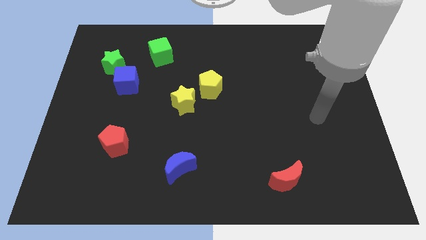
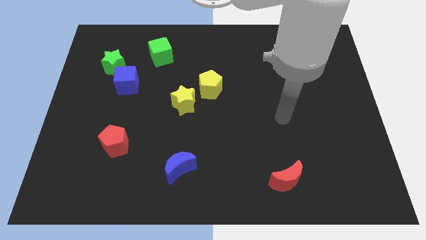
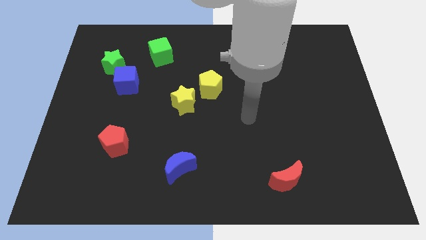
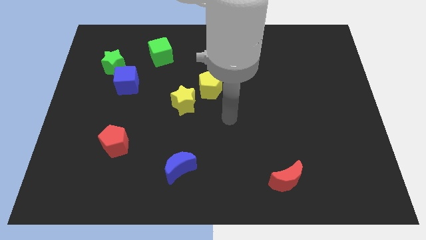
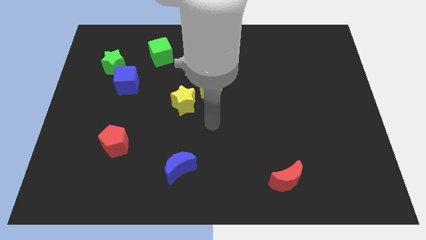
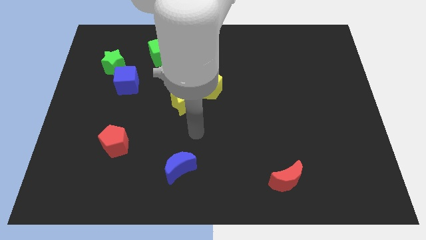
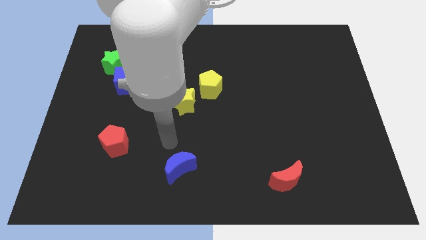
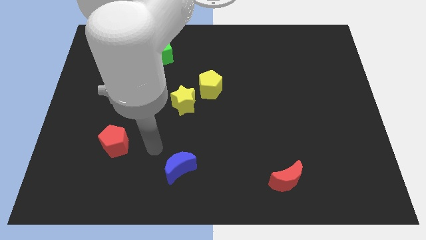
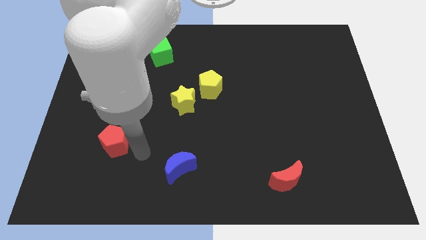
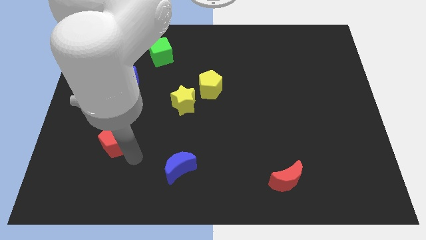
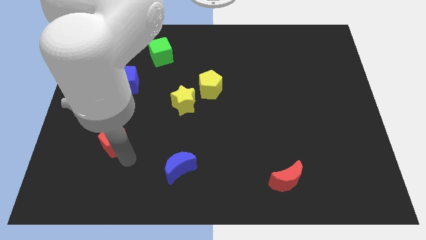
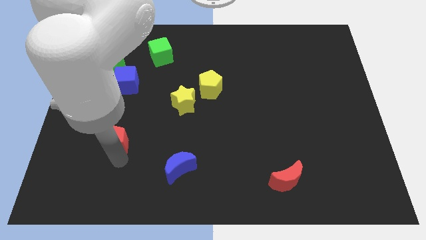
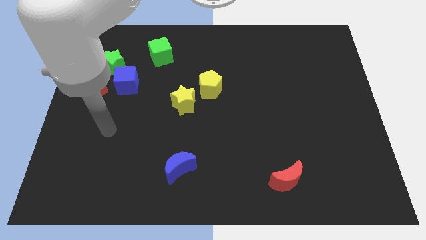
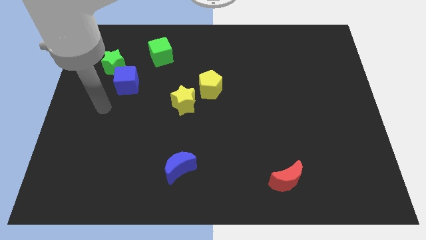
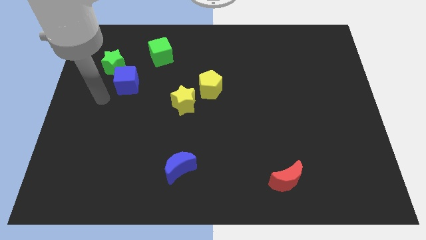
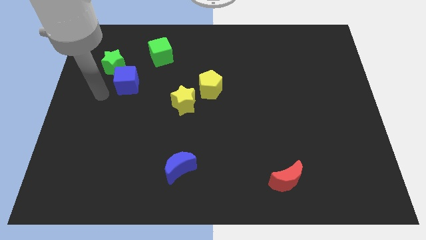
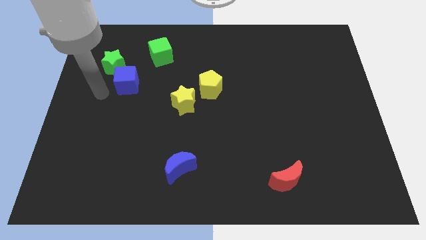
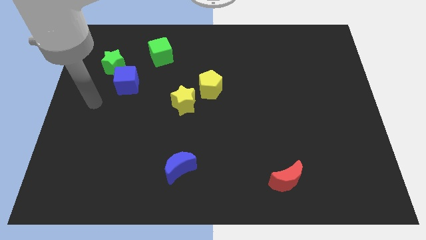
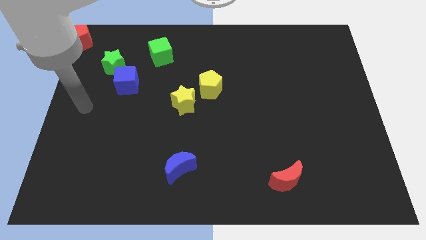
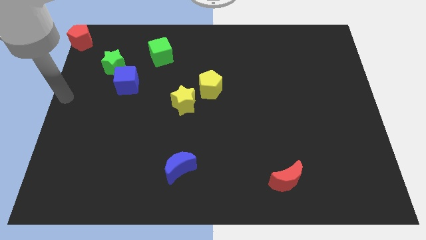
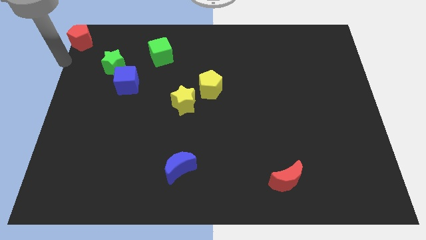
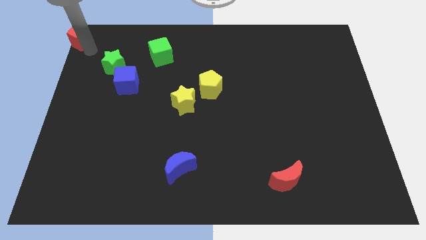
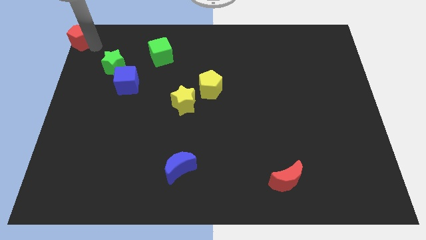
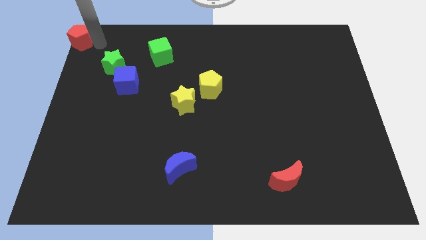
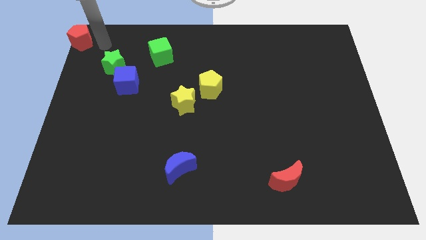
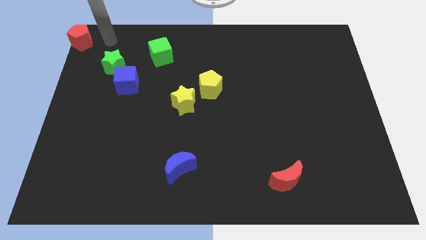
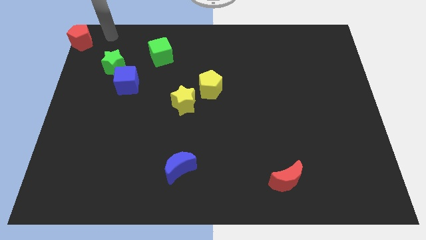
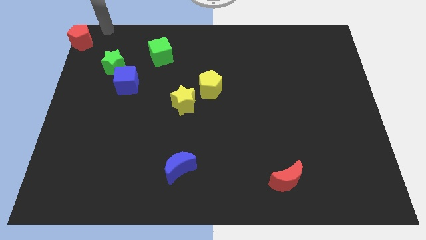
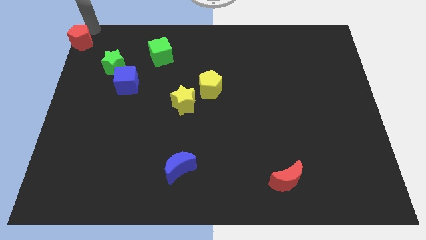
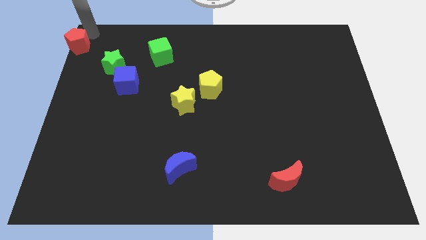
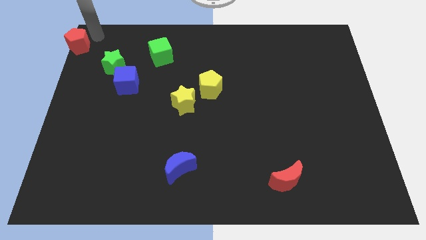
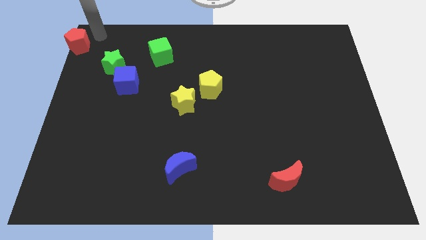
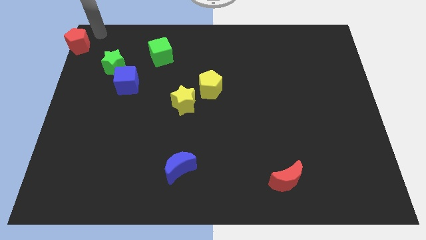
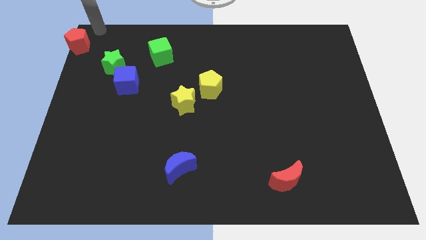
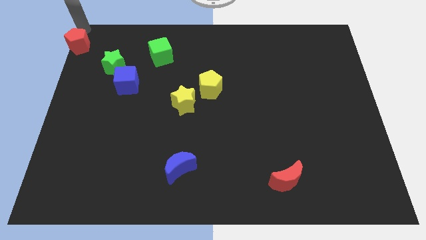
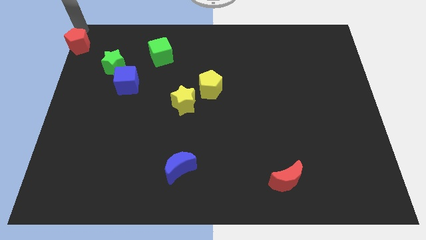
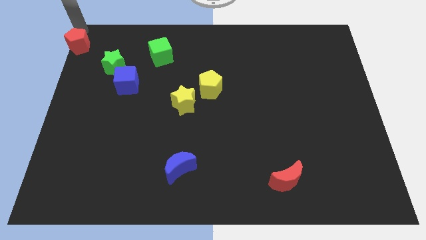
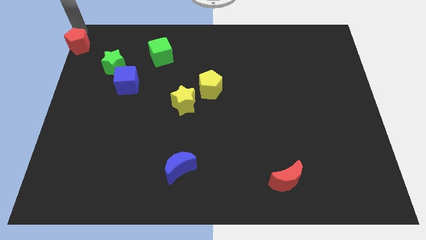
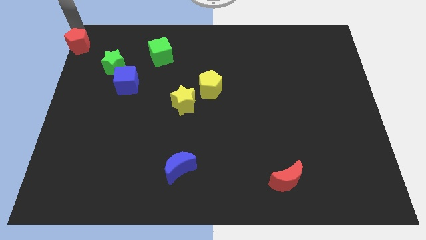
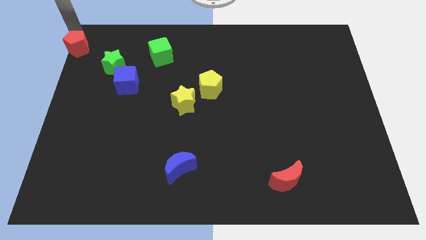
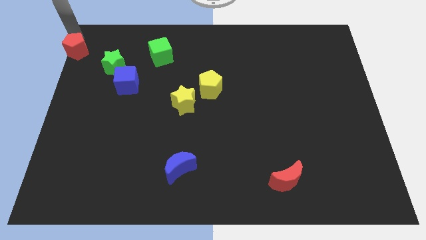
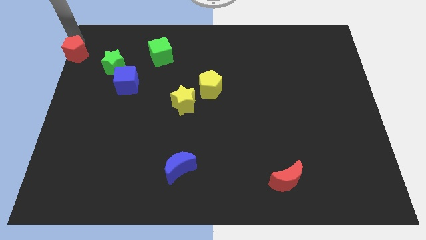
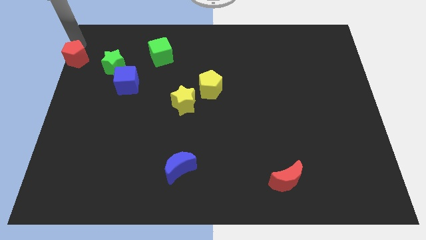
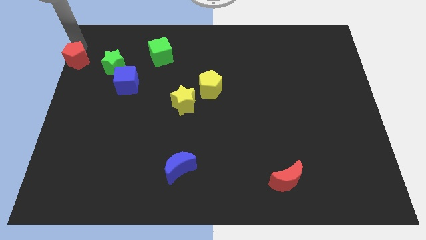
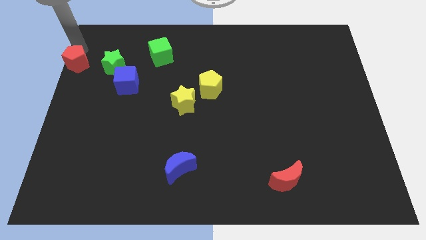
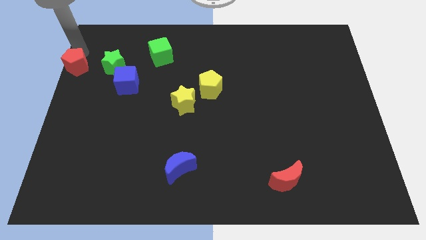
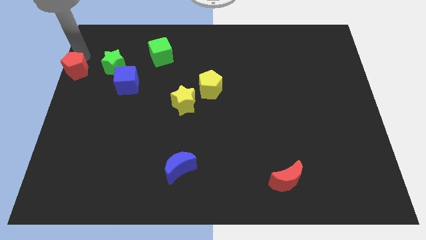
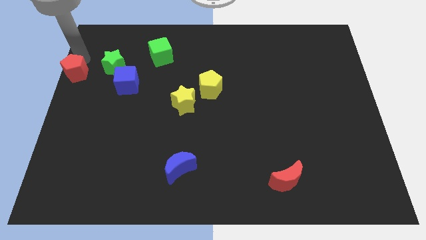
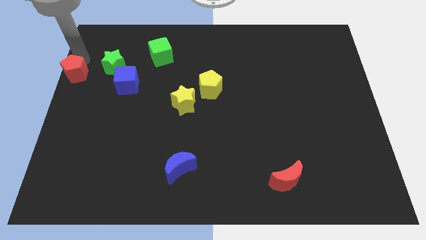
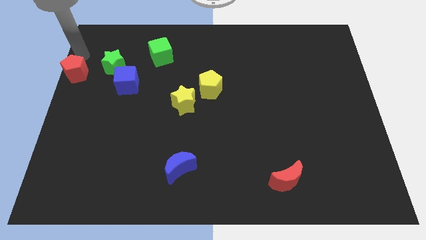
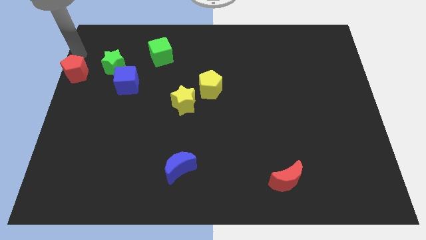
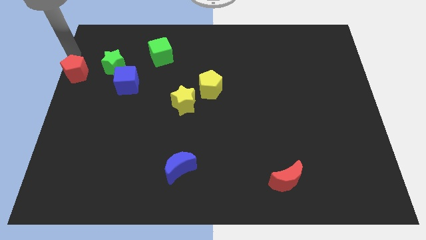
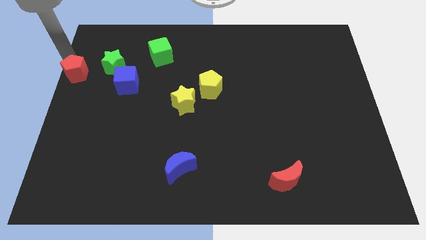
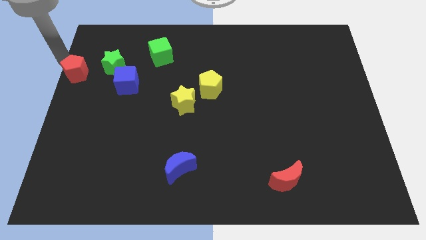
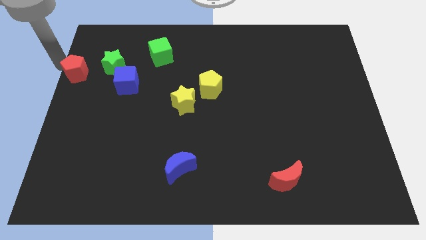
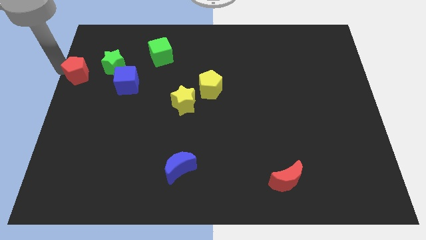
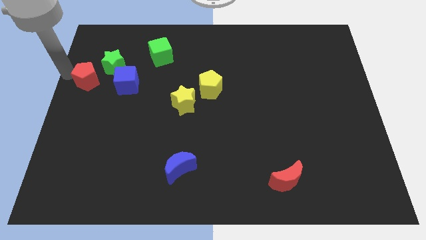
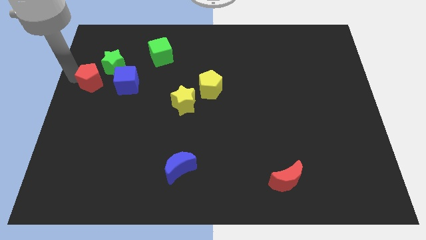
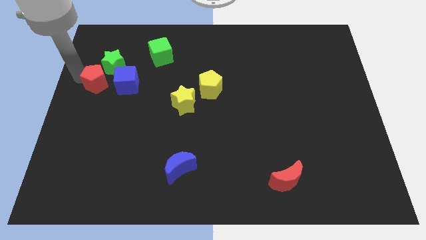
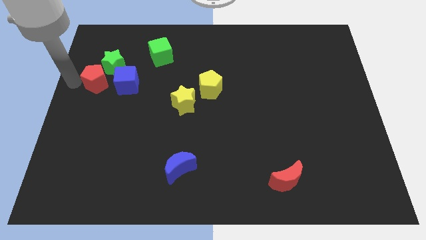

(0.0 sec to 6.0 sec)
push the red pentagon close to the green star

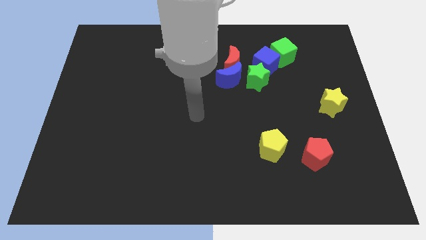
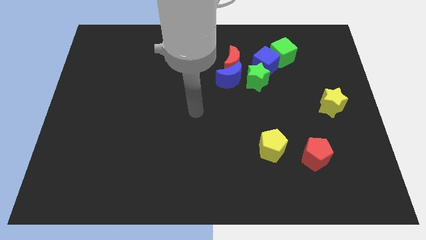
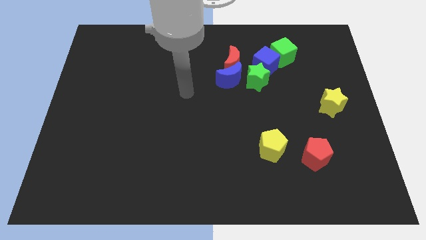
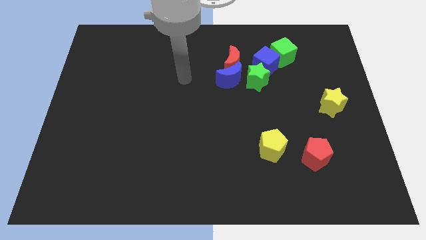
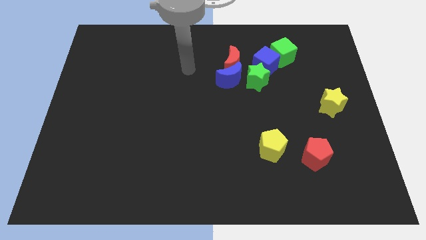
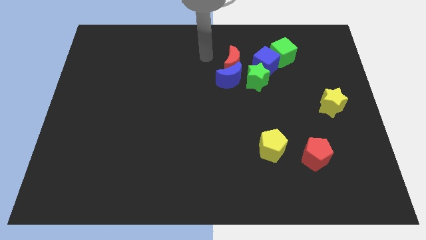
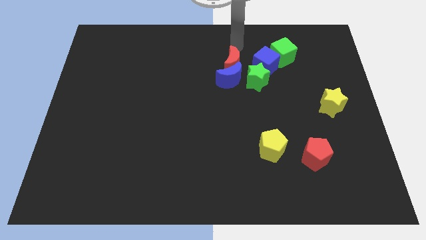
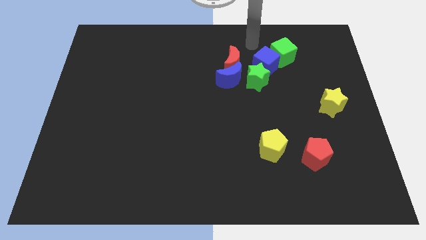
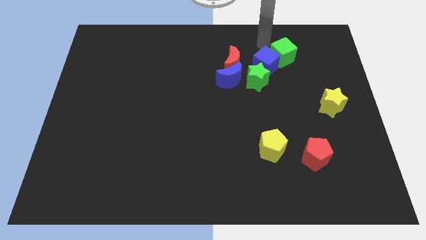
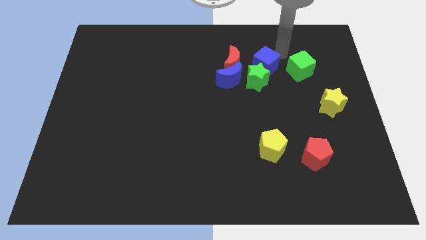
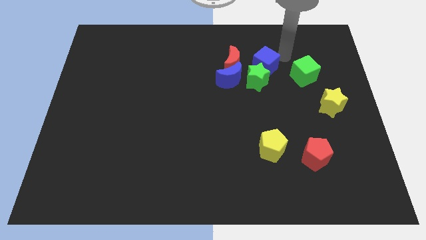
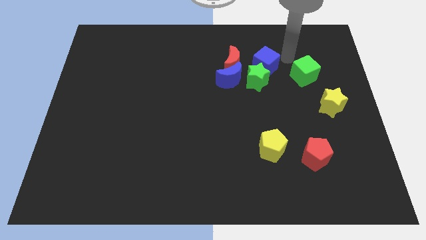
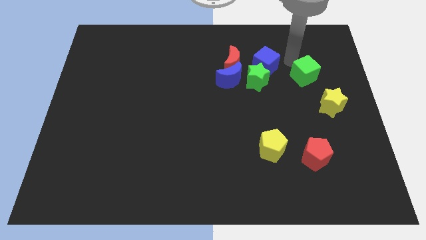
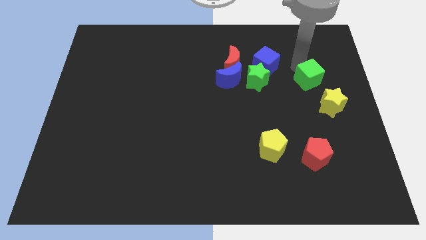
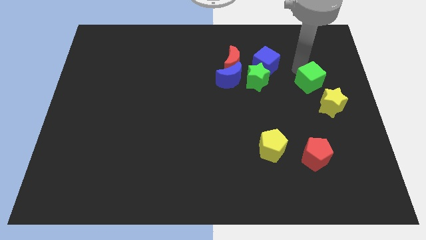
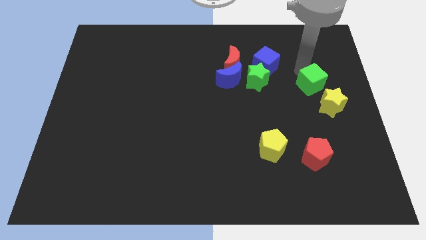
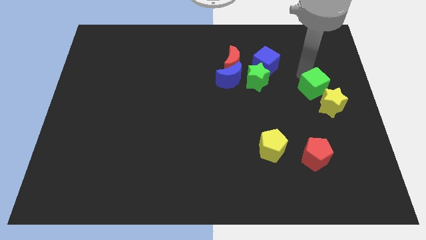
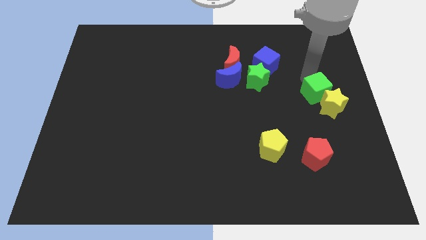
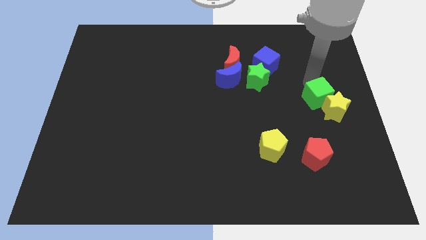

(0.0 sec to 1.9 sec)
move the green cube to the yellow star

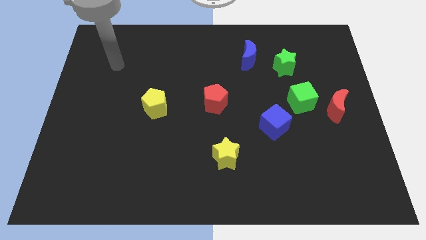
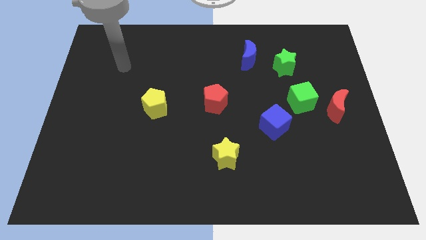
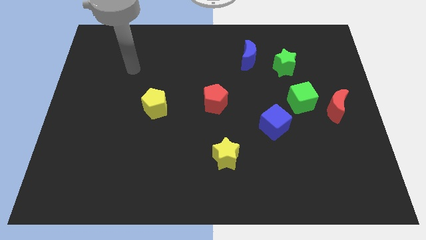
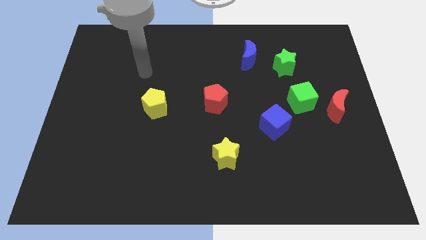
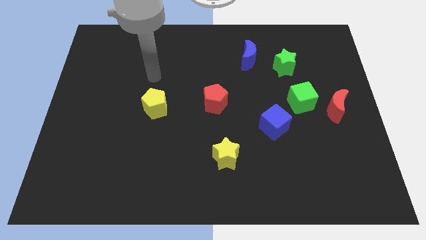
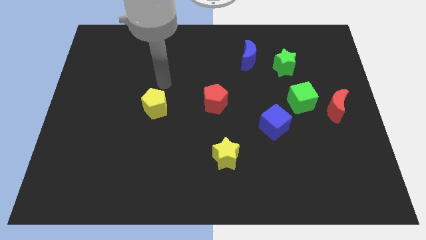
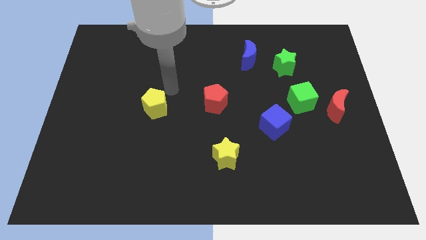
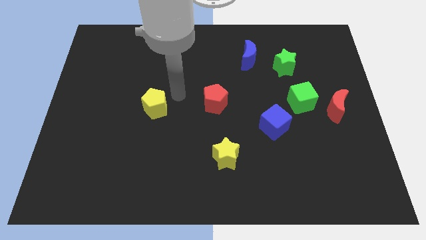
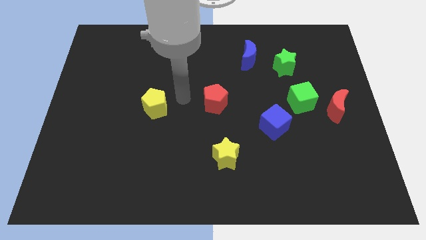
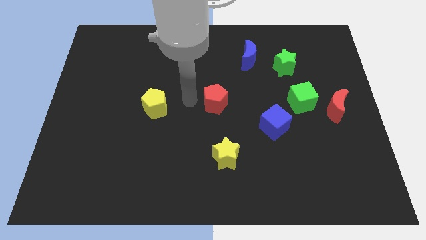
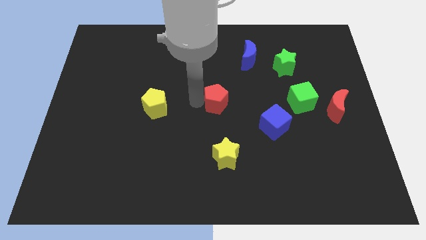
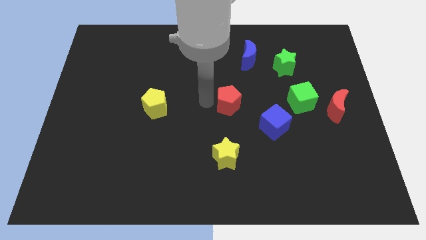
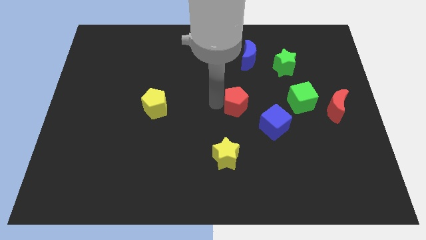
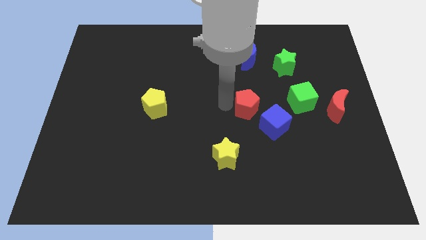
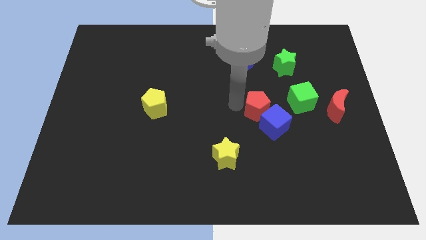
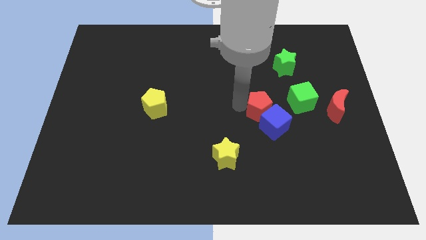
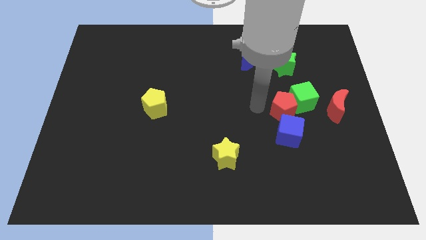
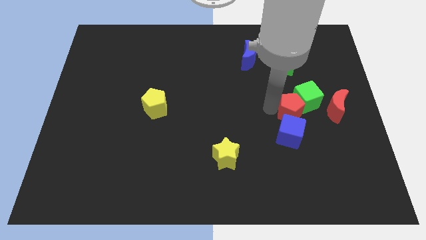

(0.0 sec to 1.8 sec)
put the red pentagon close to the green cube
